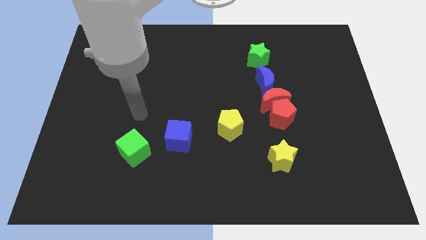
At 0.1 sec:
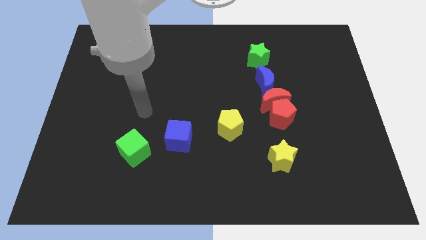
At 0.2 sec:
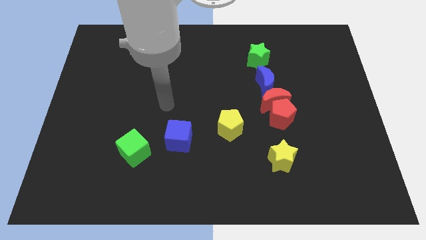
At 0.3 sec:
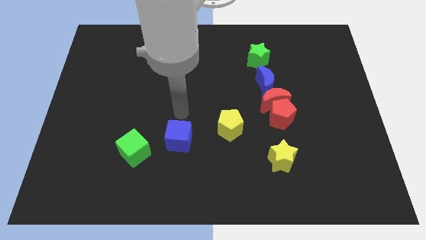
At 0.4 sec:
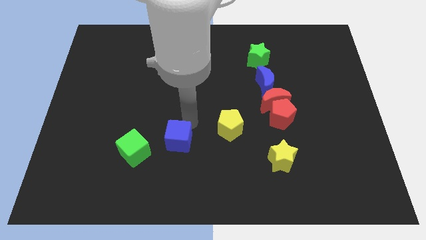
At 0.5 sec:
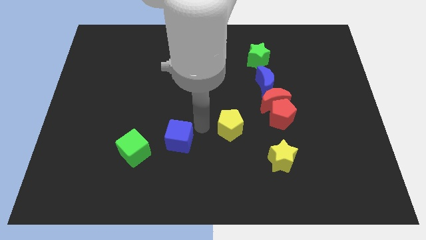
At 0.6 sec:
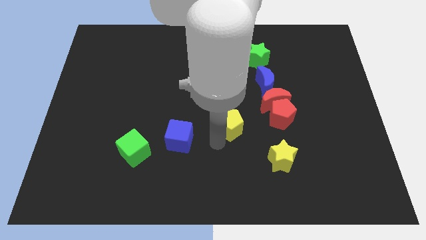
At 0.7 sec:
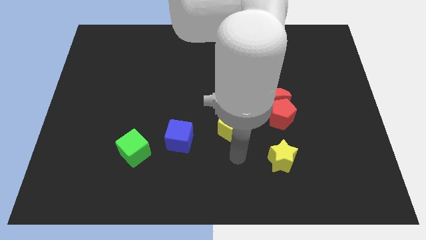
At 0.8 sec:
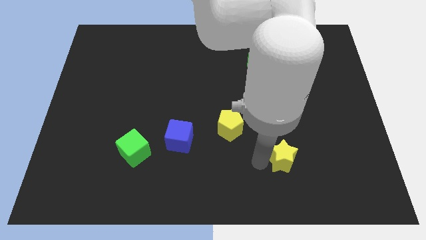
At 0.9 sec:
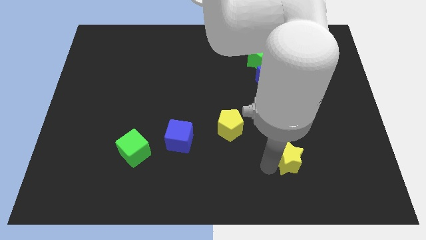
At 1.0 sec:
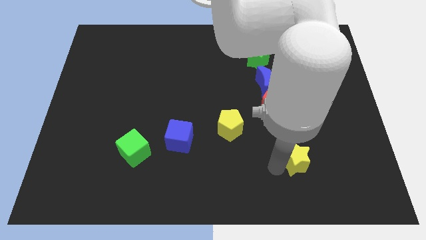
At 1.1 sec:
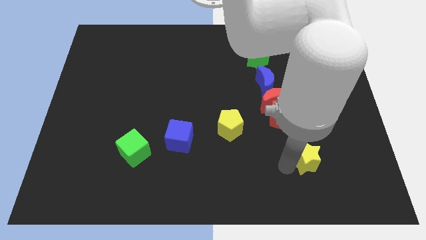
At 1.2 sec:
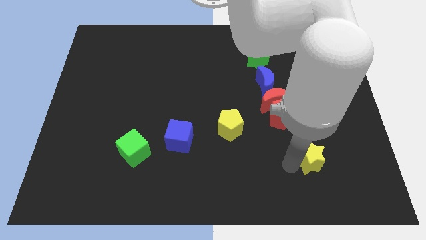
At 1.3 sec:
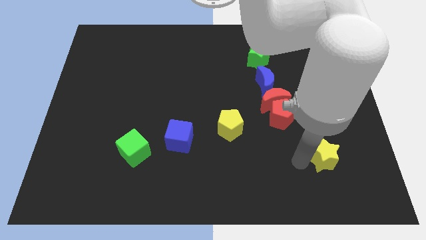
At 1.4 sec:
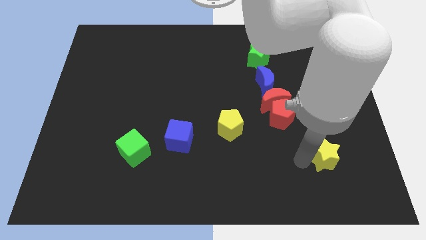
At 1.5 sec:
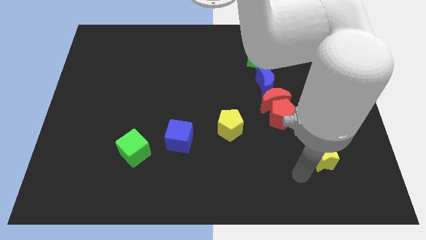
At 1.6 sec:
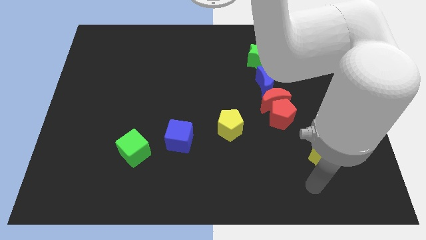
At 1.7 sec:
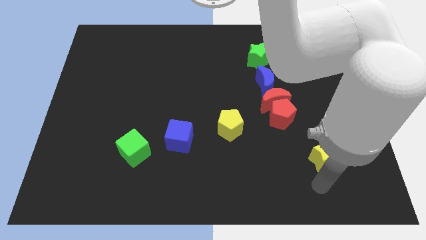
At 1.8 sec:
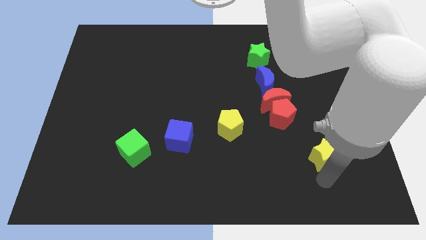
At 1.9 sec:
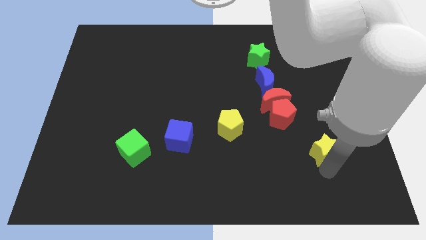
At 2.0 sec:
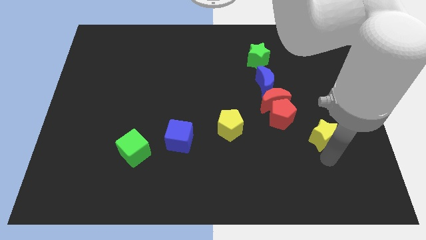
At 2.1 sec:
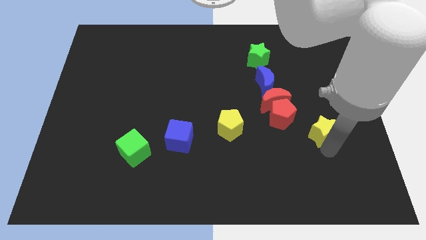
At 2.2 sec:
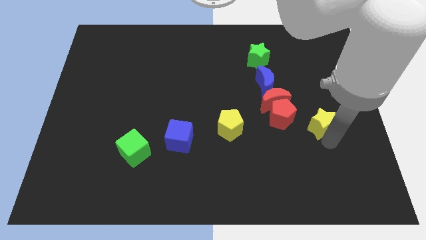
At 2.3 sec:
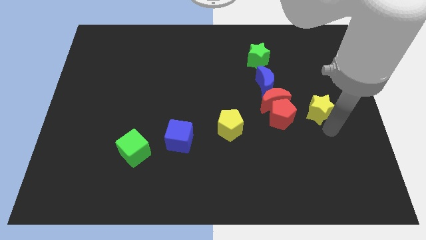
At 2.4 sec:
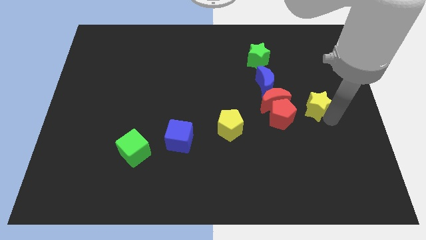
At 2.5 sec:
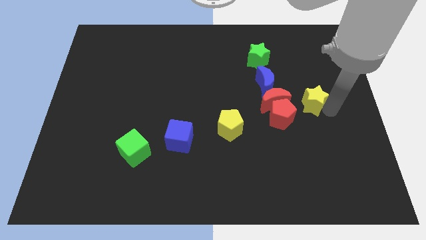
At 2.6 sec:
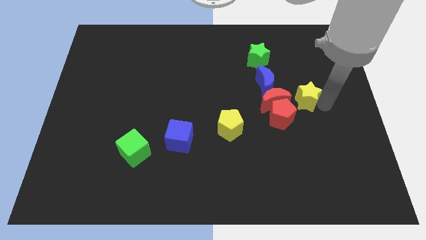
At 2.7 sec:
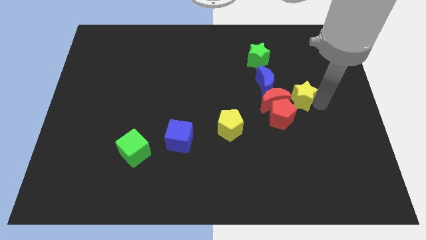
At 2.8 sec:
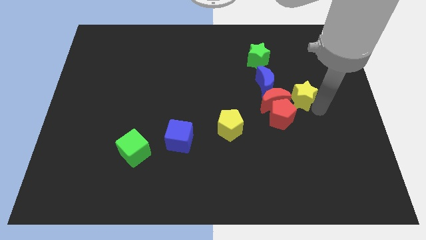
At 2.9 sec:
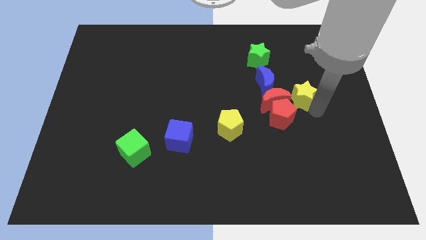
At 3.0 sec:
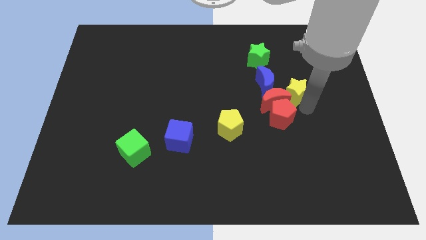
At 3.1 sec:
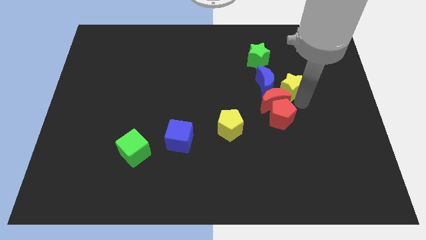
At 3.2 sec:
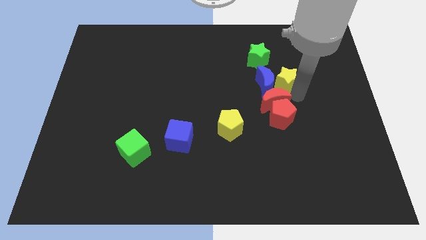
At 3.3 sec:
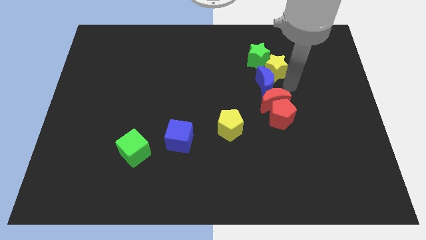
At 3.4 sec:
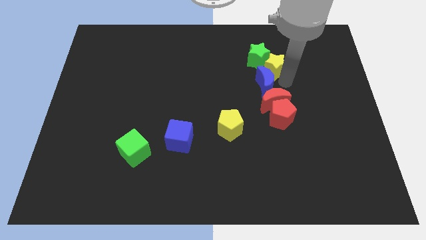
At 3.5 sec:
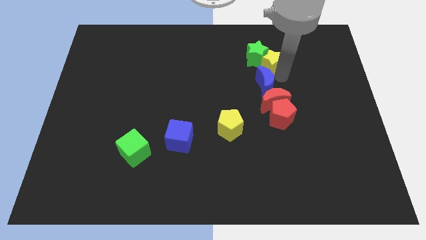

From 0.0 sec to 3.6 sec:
push the yellow star to the green star

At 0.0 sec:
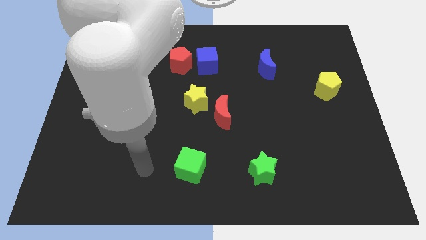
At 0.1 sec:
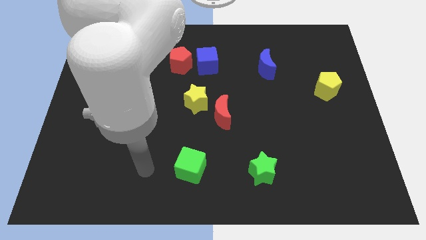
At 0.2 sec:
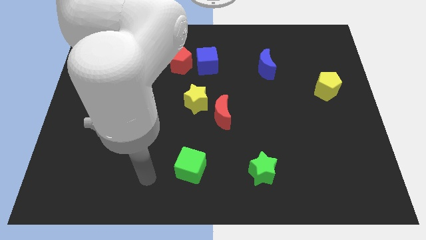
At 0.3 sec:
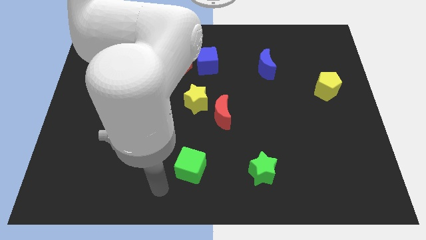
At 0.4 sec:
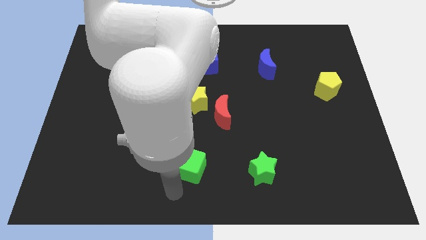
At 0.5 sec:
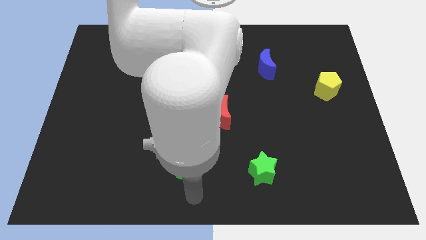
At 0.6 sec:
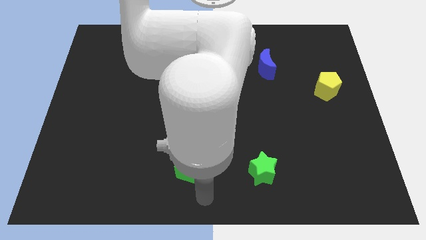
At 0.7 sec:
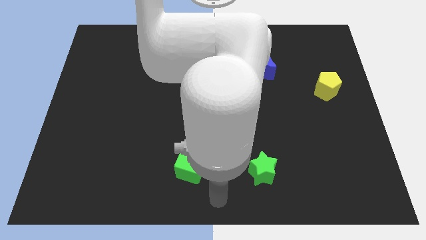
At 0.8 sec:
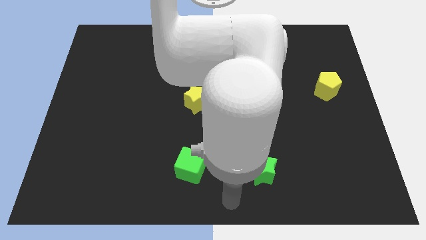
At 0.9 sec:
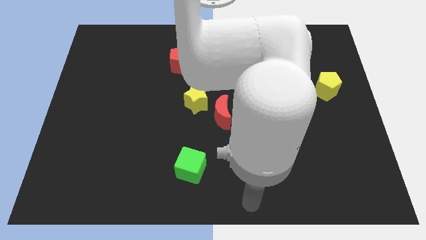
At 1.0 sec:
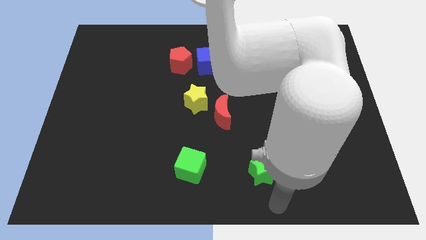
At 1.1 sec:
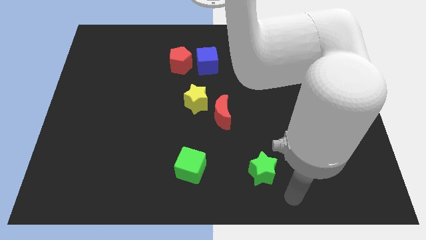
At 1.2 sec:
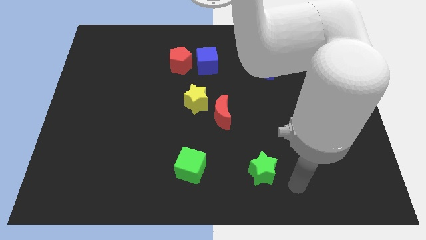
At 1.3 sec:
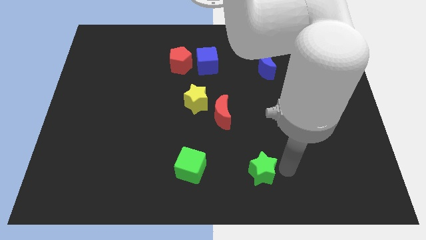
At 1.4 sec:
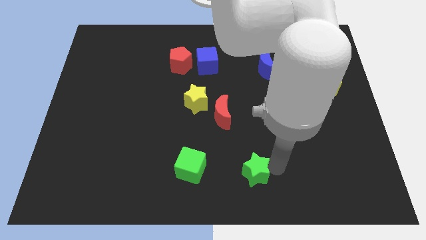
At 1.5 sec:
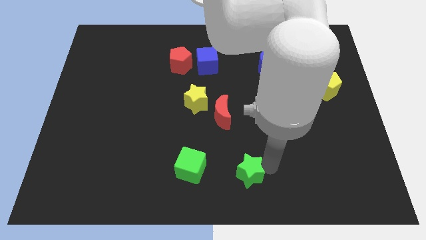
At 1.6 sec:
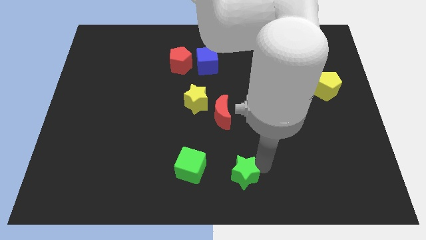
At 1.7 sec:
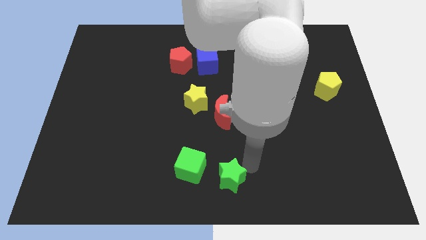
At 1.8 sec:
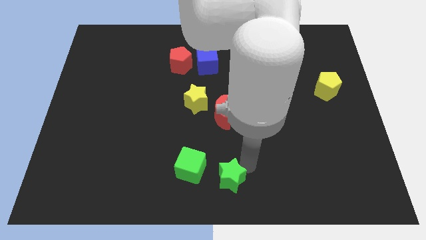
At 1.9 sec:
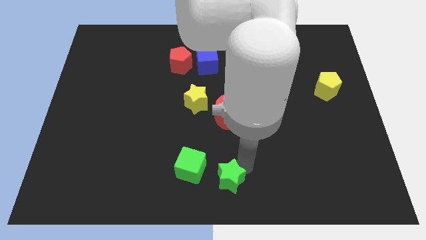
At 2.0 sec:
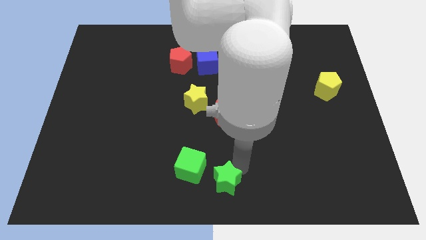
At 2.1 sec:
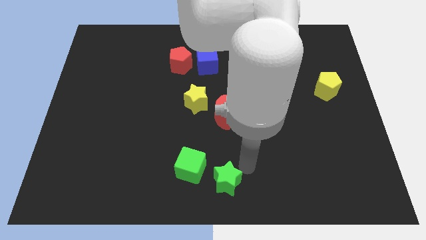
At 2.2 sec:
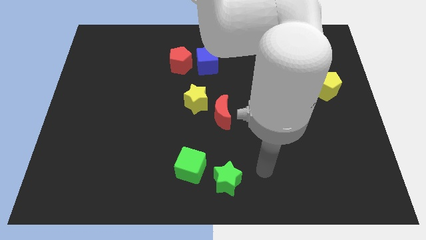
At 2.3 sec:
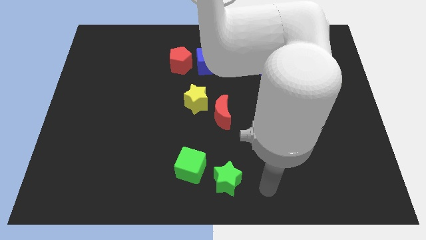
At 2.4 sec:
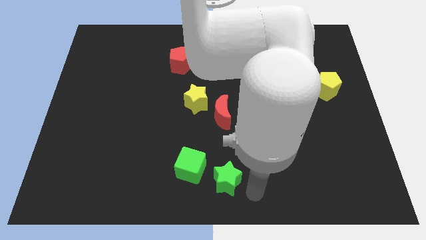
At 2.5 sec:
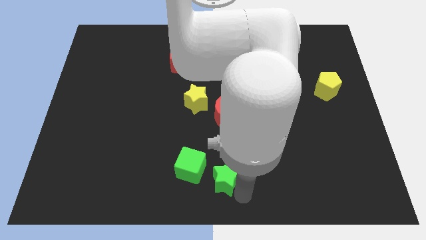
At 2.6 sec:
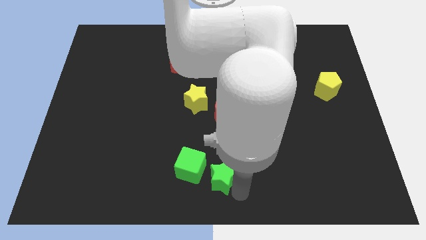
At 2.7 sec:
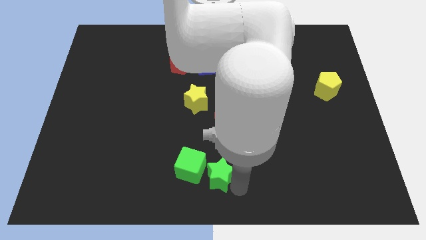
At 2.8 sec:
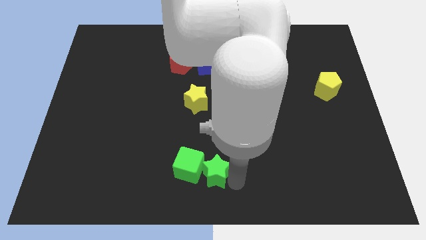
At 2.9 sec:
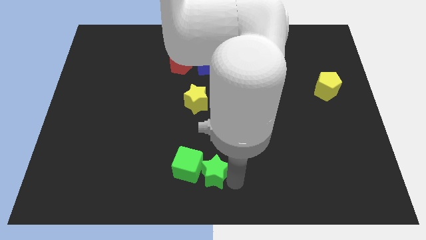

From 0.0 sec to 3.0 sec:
slide the green star close to the green cube

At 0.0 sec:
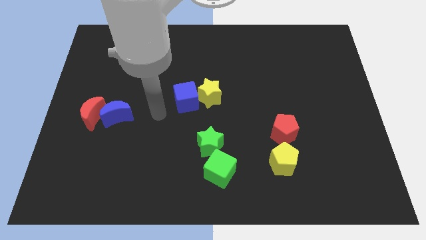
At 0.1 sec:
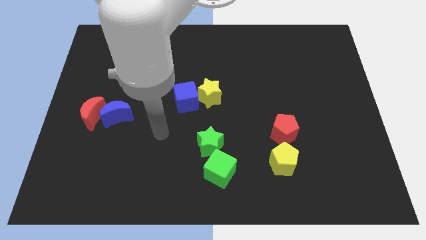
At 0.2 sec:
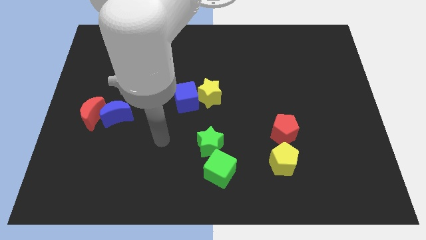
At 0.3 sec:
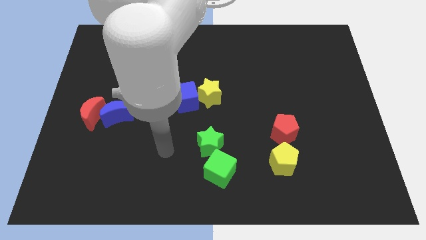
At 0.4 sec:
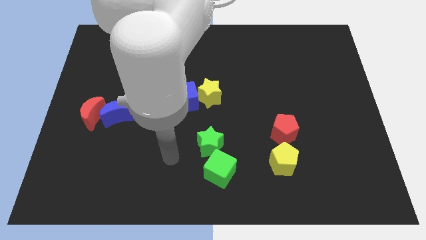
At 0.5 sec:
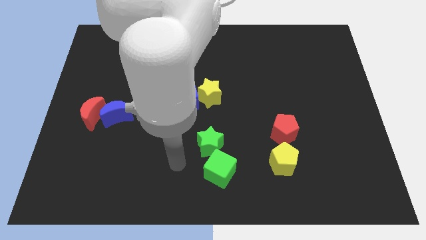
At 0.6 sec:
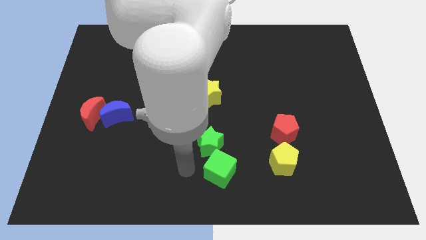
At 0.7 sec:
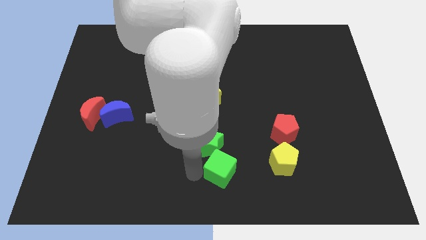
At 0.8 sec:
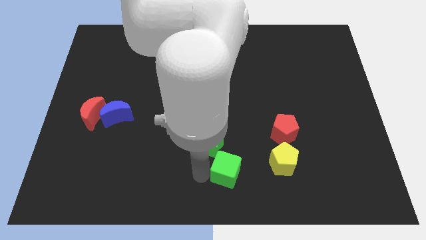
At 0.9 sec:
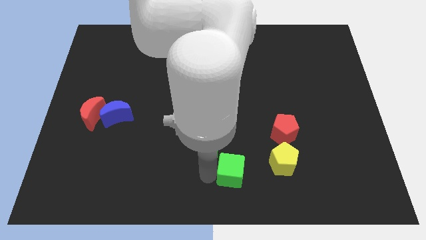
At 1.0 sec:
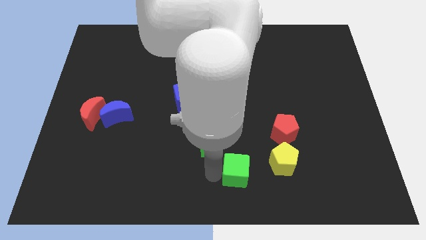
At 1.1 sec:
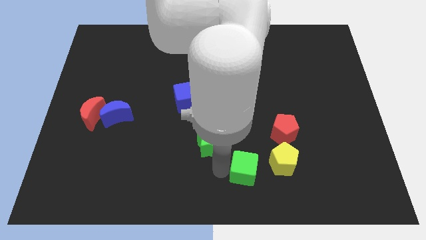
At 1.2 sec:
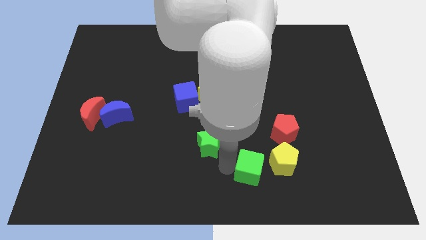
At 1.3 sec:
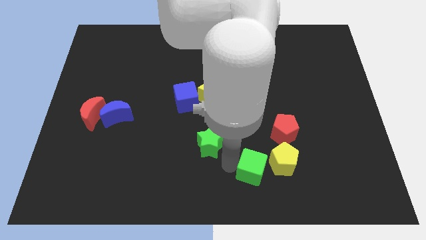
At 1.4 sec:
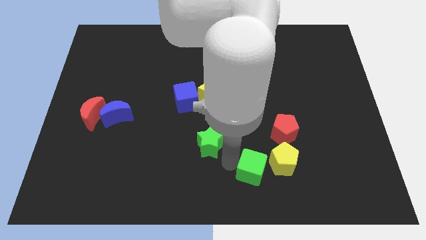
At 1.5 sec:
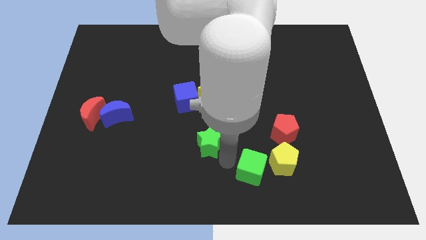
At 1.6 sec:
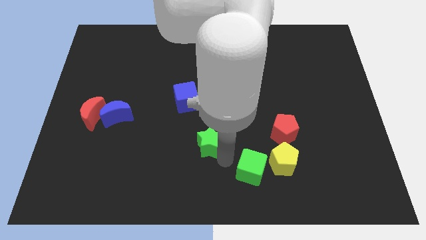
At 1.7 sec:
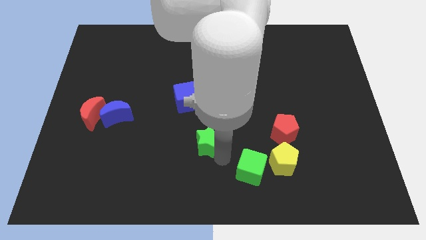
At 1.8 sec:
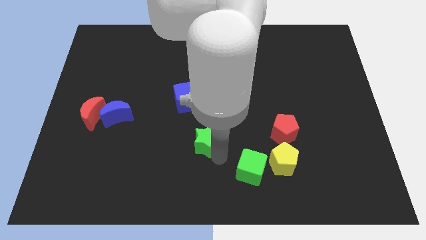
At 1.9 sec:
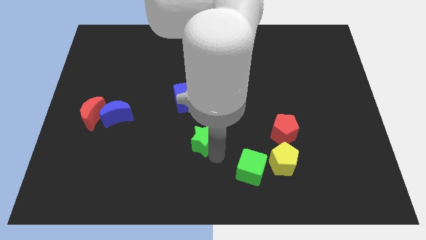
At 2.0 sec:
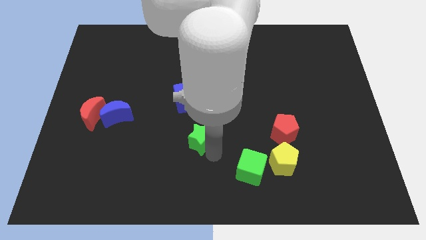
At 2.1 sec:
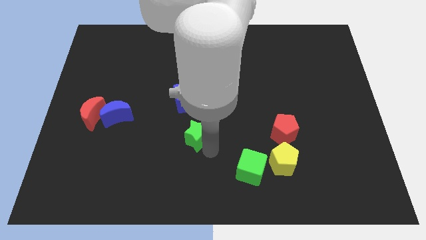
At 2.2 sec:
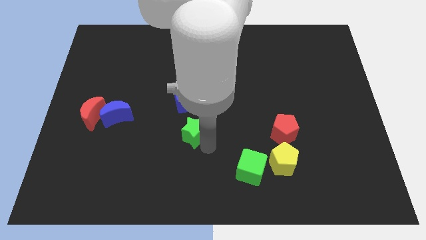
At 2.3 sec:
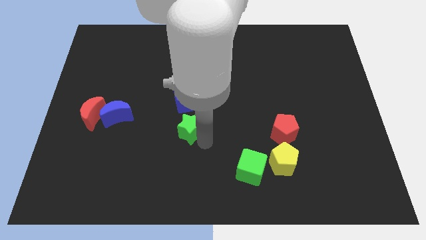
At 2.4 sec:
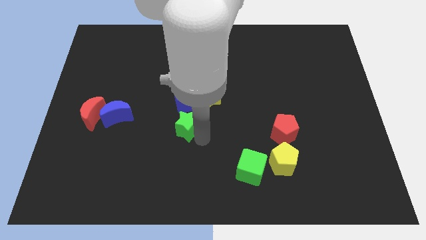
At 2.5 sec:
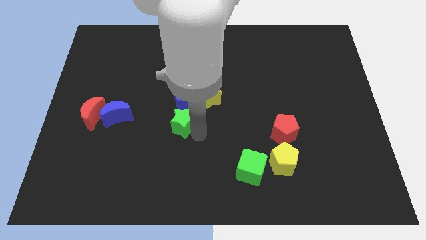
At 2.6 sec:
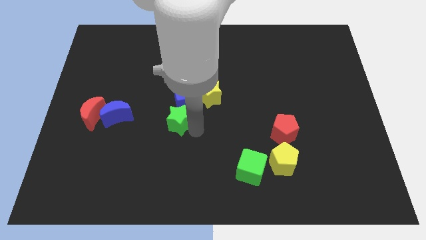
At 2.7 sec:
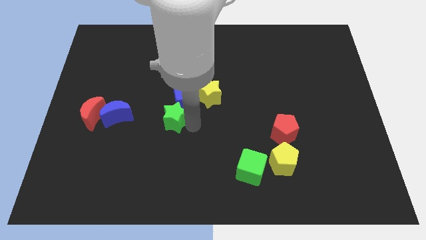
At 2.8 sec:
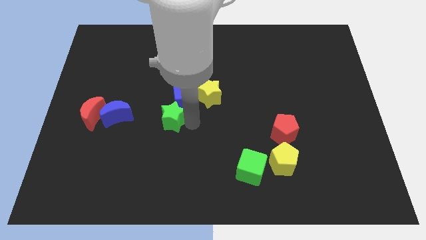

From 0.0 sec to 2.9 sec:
move the green star next to the blue cube
